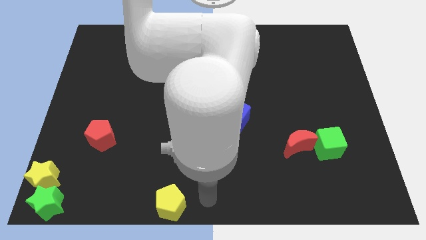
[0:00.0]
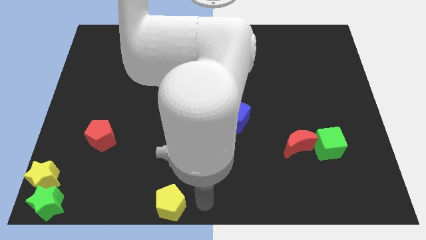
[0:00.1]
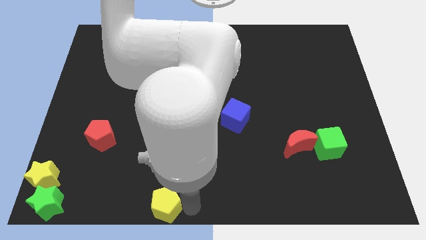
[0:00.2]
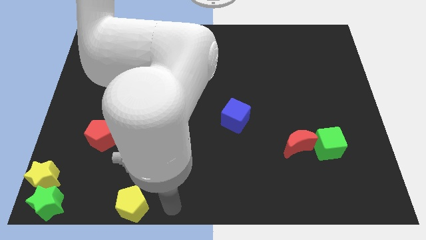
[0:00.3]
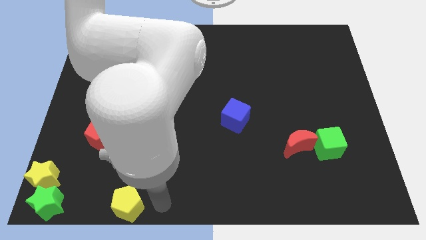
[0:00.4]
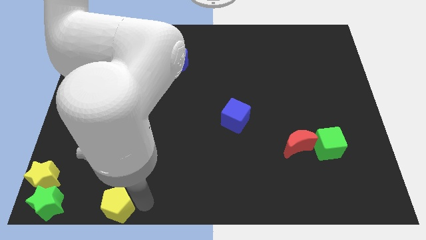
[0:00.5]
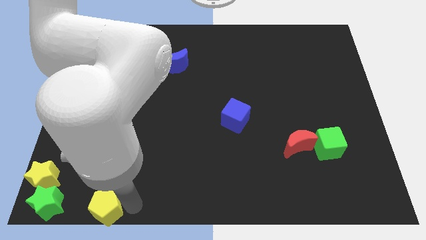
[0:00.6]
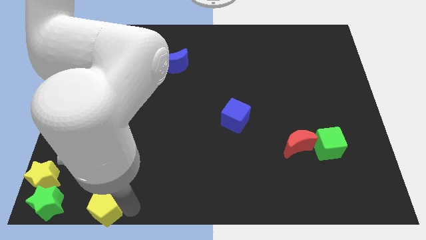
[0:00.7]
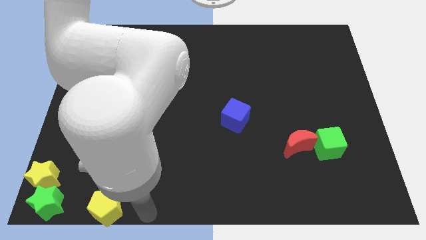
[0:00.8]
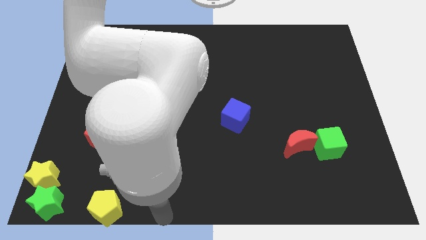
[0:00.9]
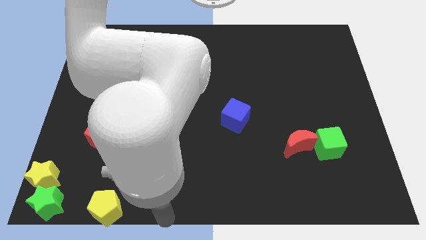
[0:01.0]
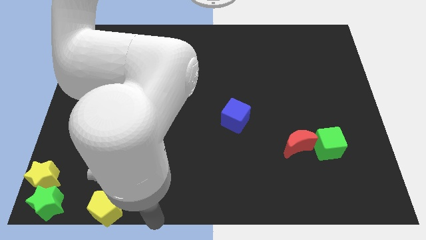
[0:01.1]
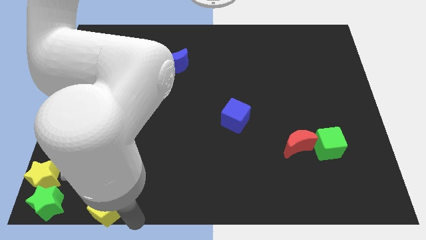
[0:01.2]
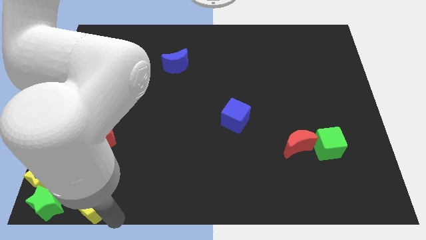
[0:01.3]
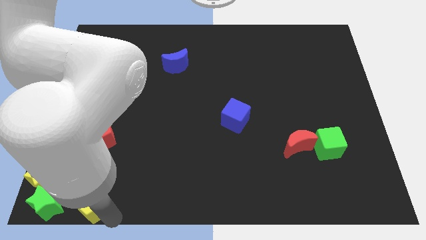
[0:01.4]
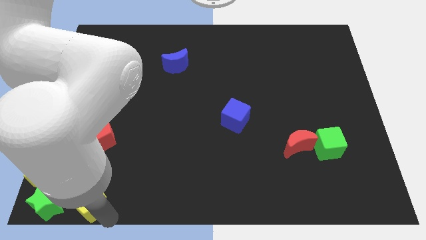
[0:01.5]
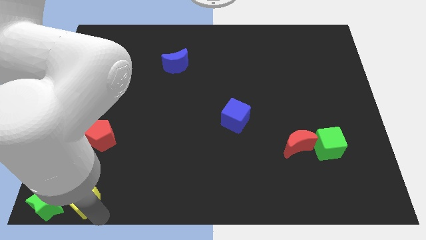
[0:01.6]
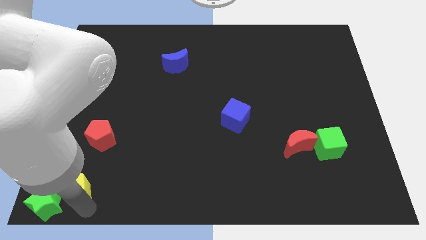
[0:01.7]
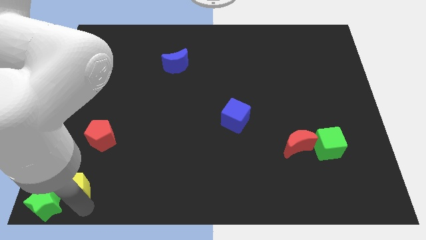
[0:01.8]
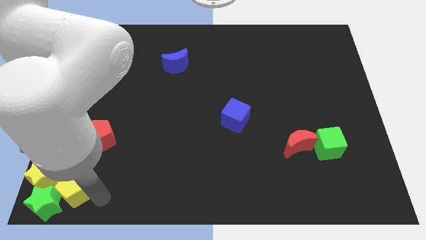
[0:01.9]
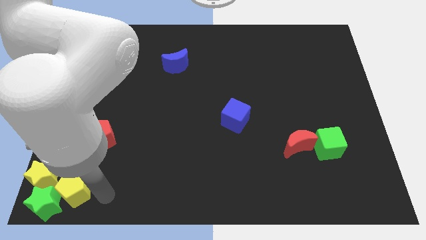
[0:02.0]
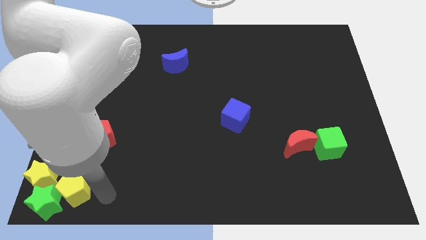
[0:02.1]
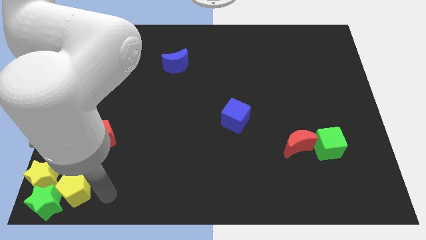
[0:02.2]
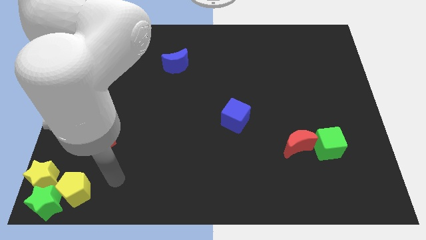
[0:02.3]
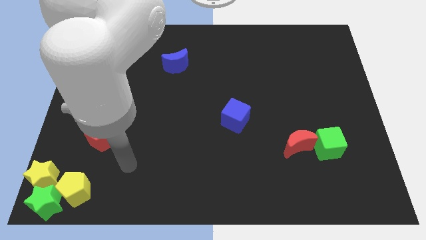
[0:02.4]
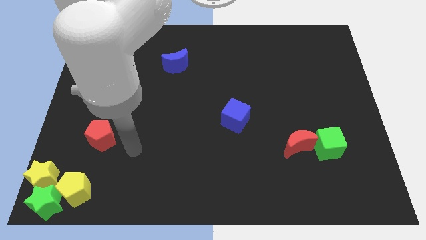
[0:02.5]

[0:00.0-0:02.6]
move yellow pentagon into yellow and green star

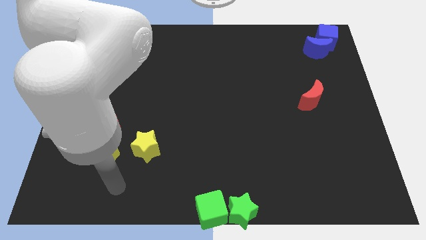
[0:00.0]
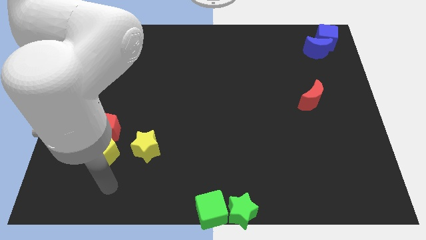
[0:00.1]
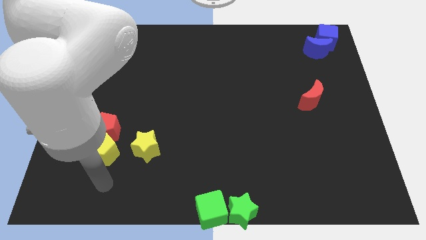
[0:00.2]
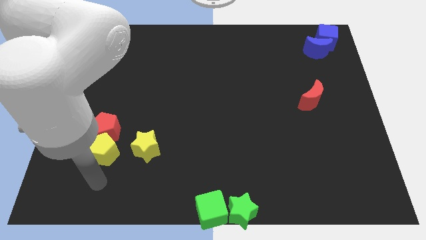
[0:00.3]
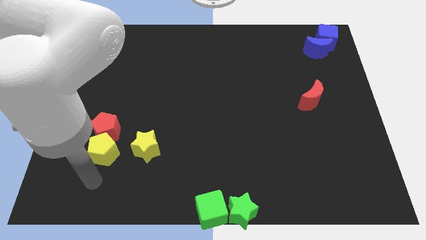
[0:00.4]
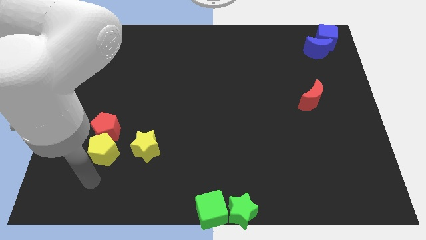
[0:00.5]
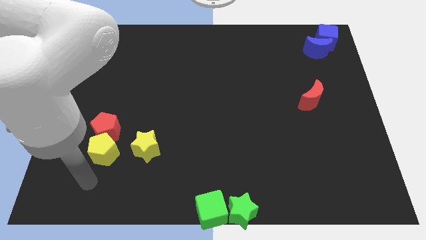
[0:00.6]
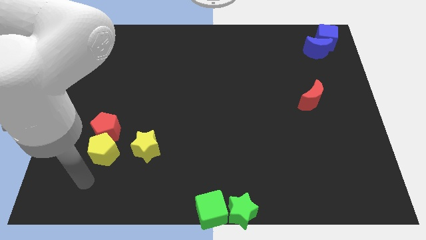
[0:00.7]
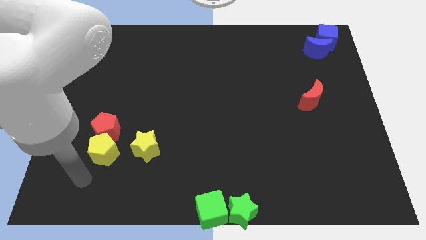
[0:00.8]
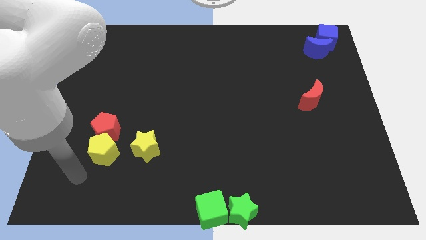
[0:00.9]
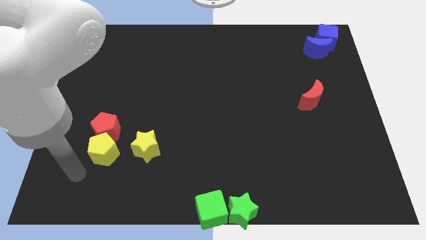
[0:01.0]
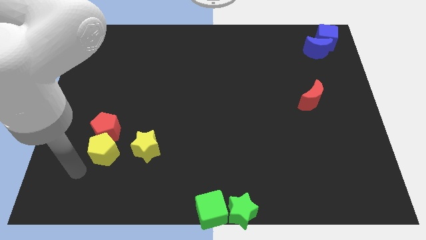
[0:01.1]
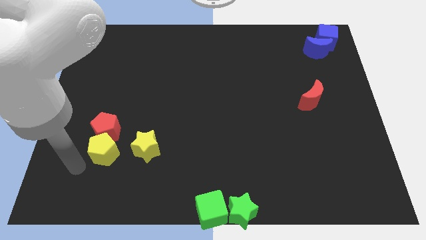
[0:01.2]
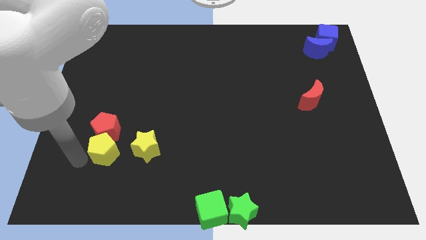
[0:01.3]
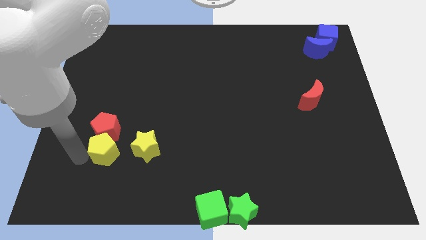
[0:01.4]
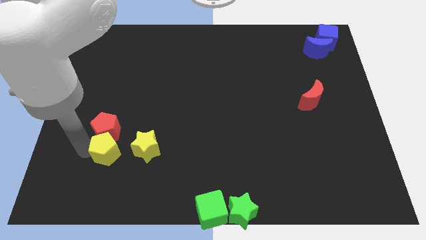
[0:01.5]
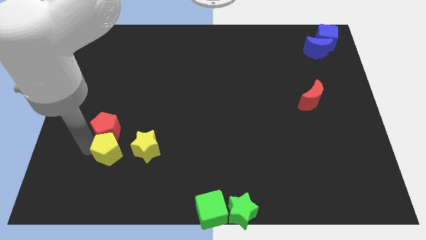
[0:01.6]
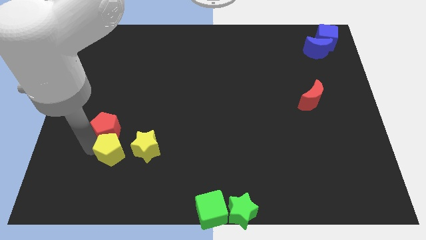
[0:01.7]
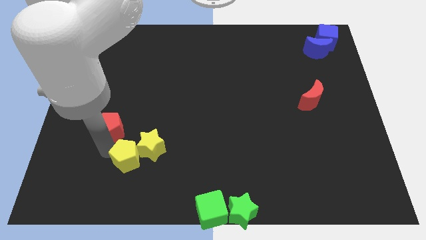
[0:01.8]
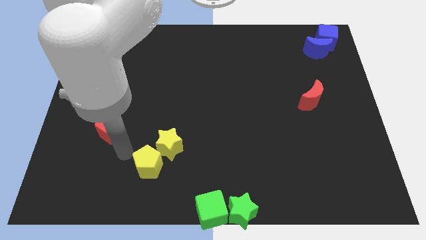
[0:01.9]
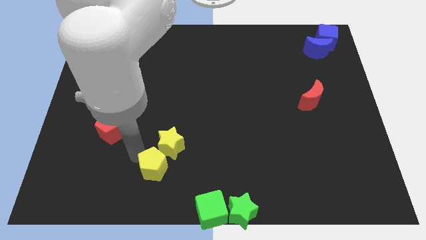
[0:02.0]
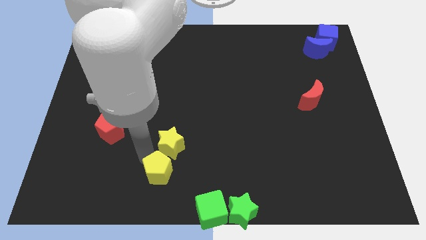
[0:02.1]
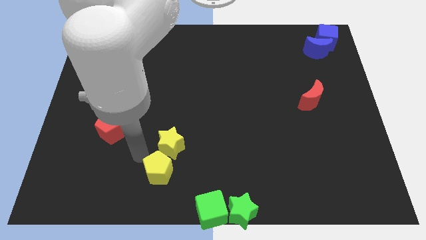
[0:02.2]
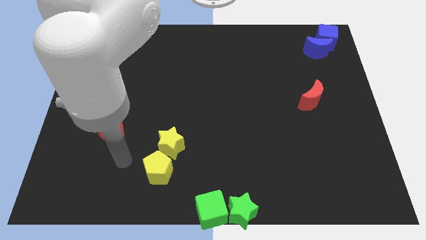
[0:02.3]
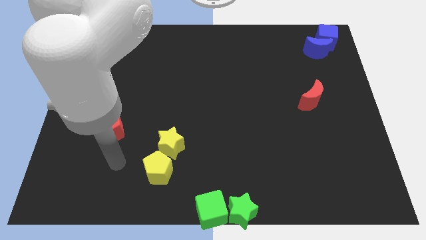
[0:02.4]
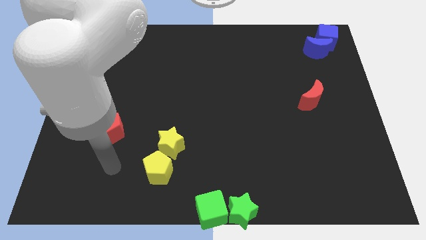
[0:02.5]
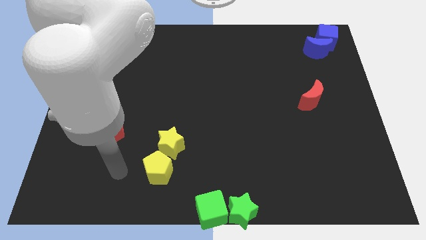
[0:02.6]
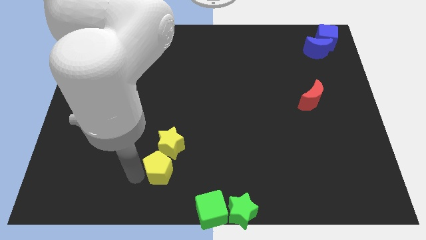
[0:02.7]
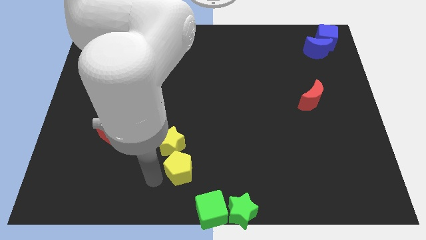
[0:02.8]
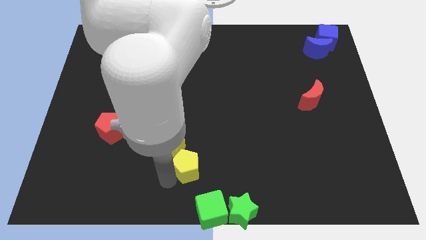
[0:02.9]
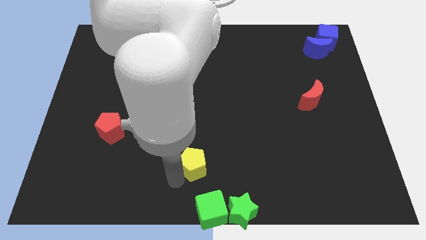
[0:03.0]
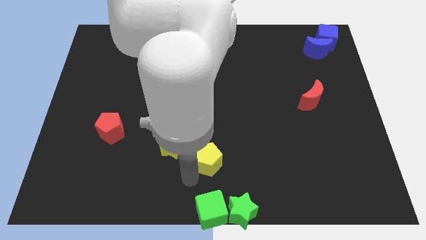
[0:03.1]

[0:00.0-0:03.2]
push yellow pentagon above green cube

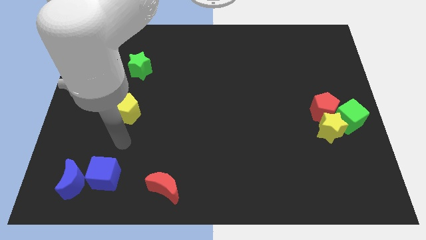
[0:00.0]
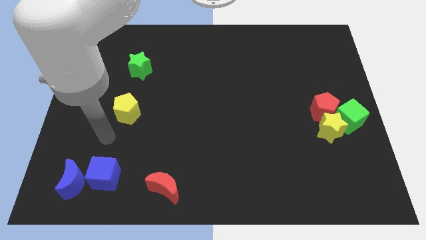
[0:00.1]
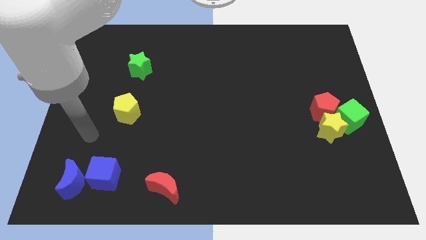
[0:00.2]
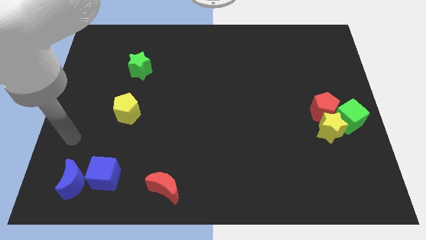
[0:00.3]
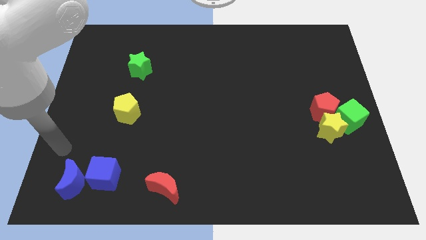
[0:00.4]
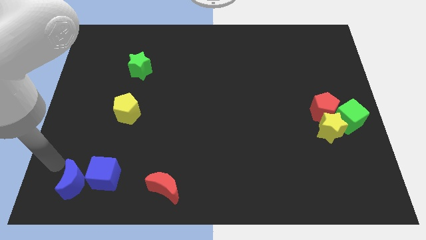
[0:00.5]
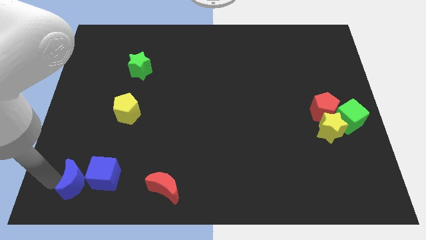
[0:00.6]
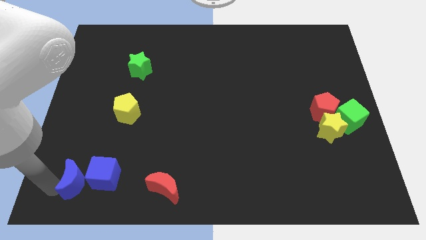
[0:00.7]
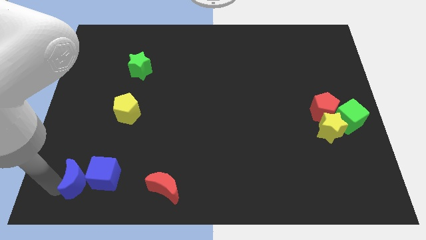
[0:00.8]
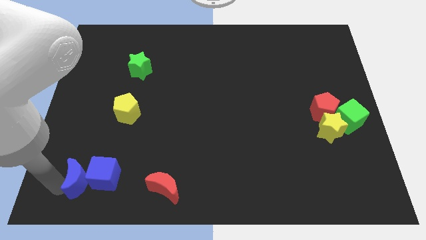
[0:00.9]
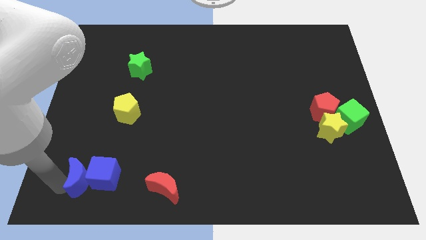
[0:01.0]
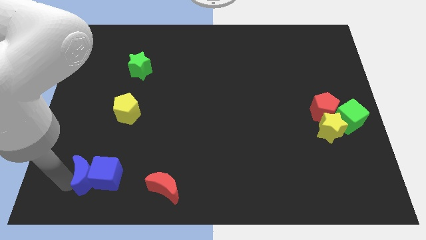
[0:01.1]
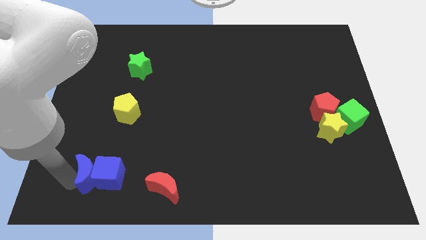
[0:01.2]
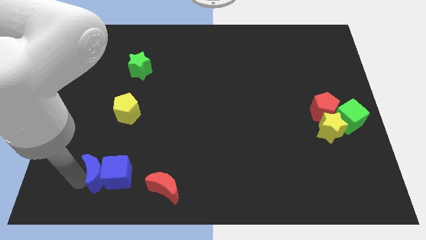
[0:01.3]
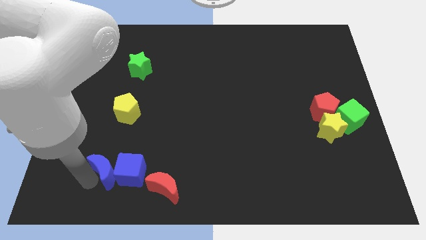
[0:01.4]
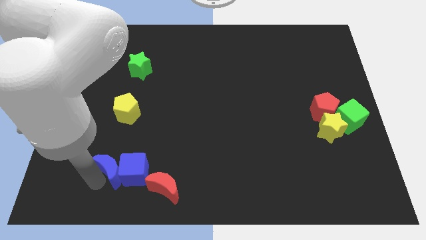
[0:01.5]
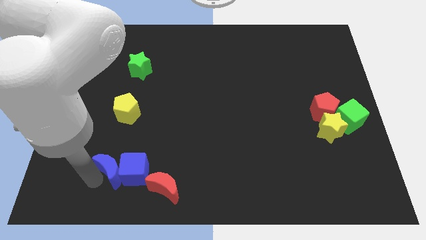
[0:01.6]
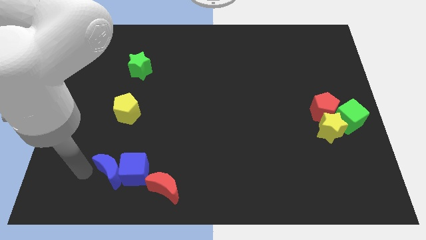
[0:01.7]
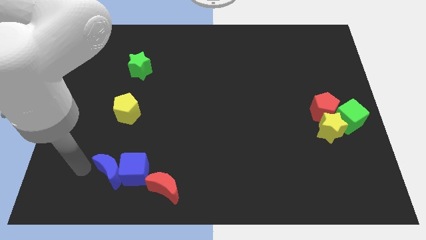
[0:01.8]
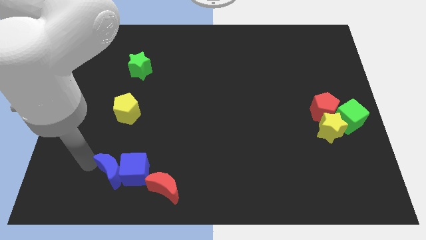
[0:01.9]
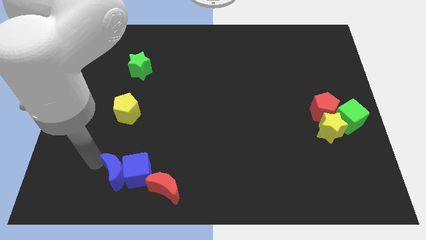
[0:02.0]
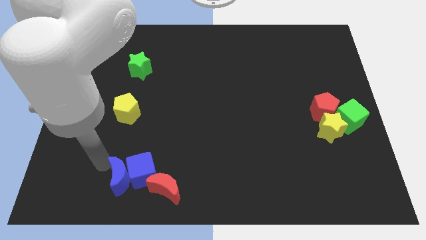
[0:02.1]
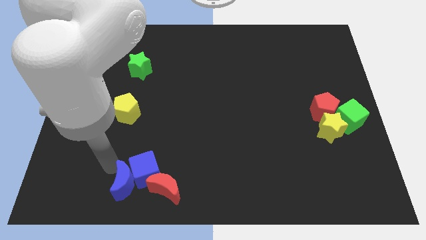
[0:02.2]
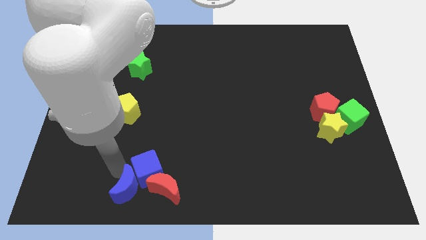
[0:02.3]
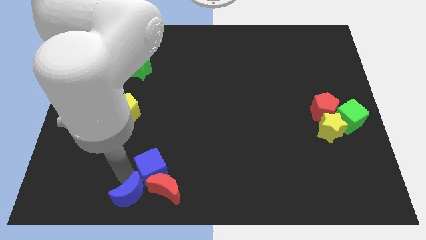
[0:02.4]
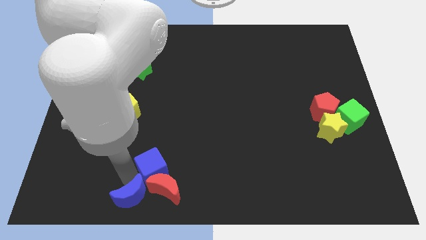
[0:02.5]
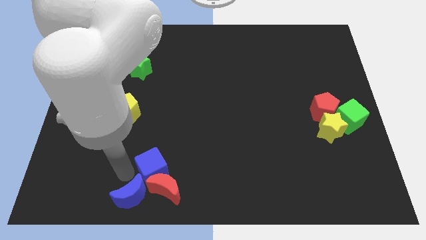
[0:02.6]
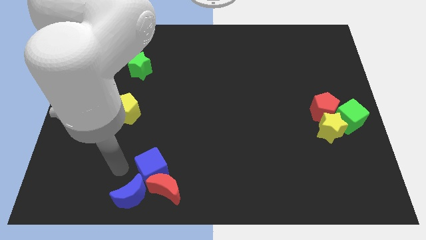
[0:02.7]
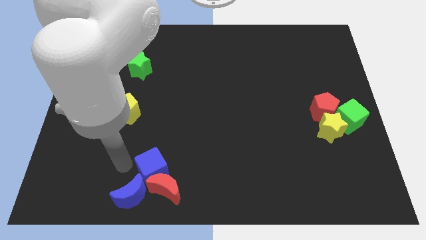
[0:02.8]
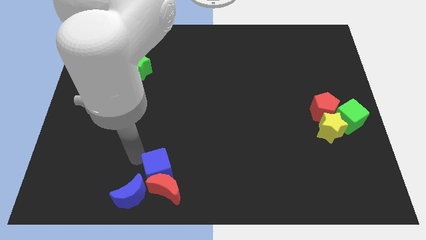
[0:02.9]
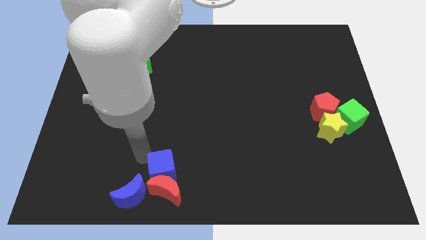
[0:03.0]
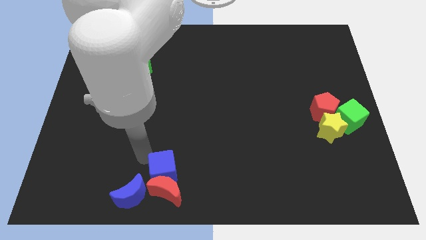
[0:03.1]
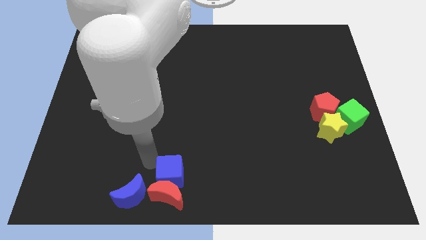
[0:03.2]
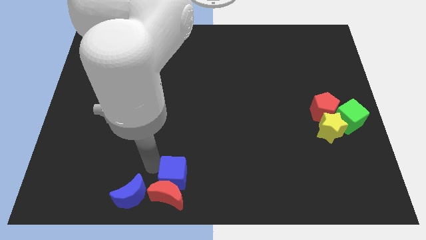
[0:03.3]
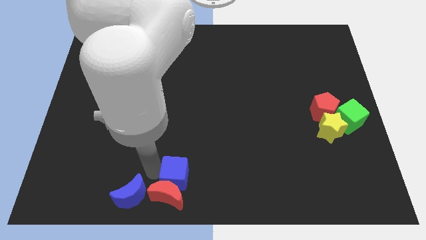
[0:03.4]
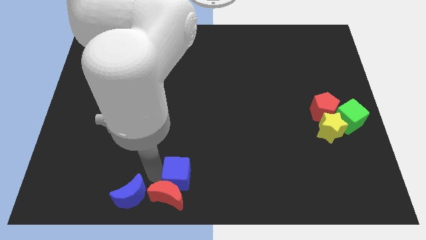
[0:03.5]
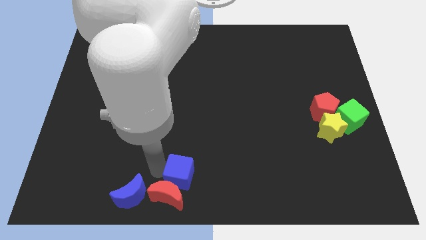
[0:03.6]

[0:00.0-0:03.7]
push the blue crescent into the blue cube
